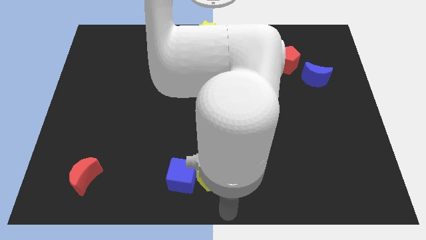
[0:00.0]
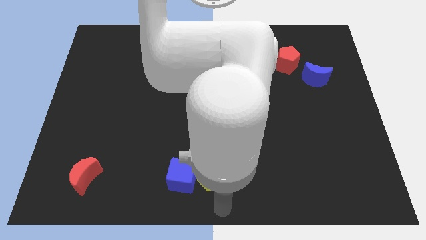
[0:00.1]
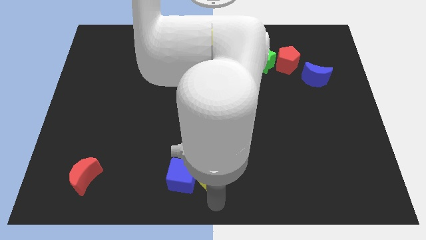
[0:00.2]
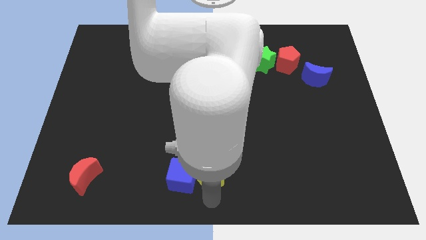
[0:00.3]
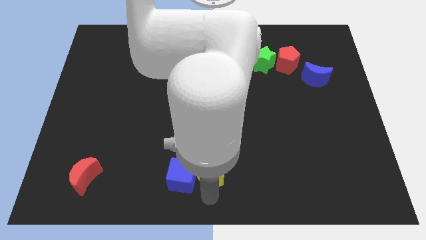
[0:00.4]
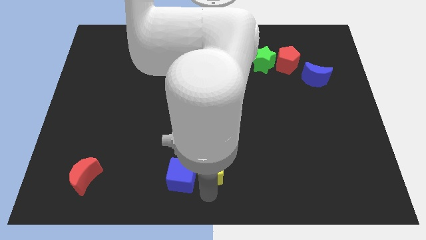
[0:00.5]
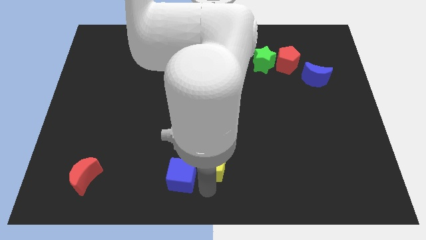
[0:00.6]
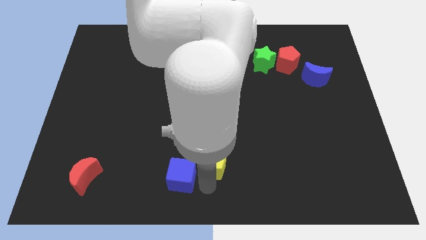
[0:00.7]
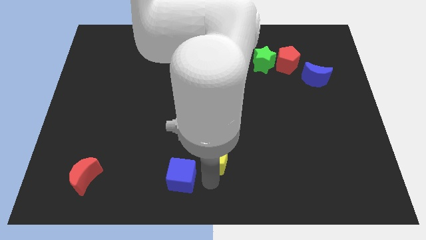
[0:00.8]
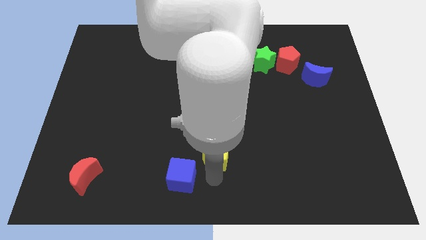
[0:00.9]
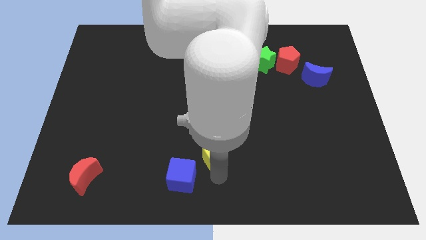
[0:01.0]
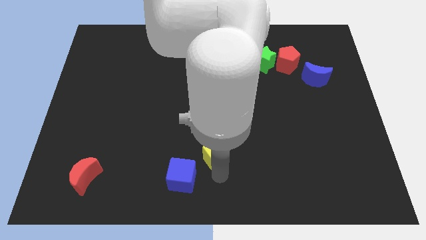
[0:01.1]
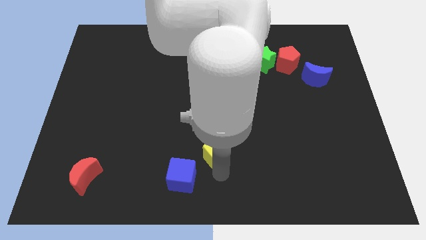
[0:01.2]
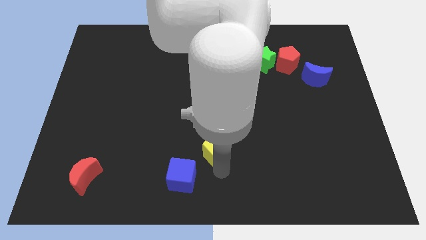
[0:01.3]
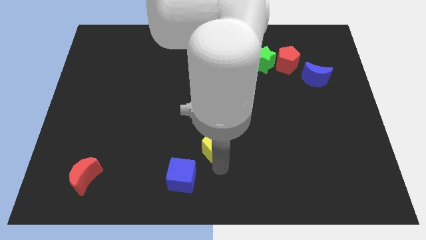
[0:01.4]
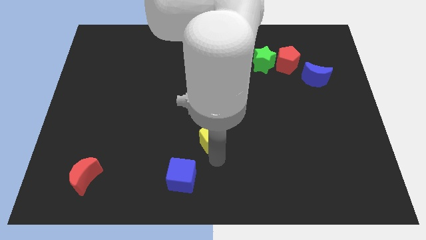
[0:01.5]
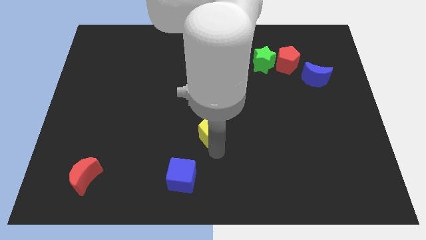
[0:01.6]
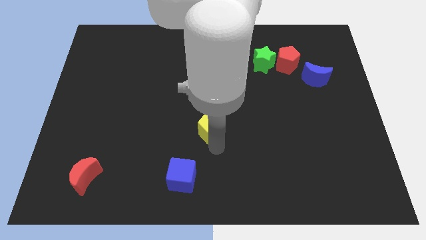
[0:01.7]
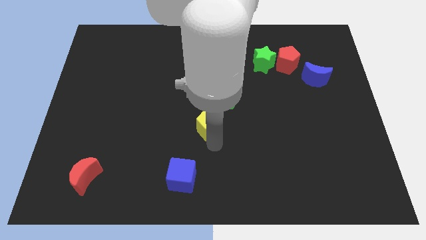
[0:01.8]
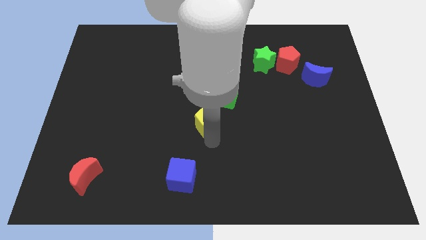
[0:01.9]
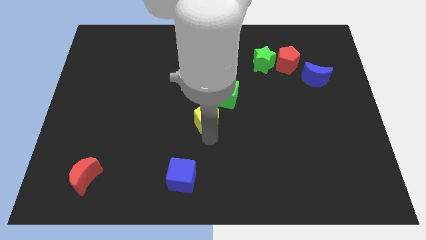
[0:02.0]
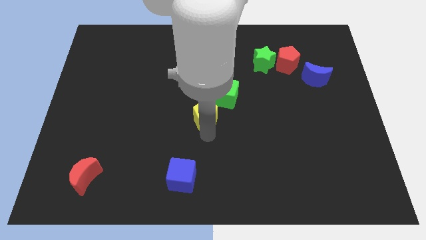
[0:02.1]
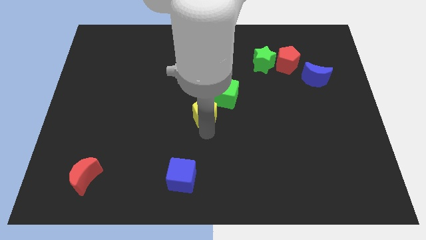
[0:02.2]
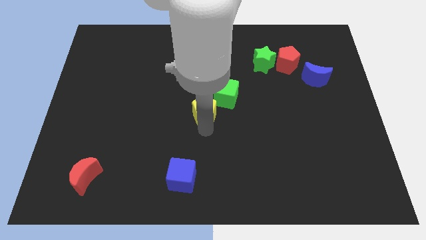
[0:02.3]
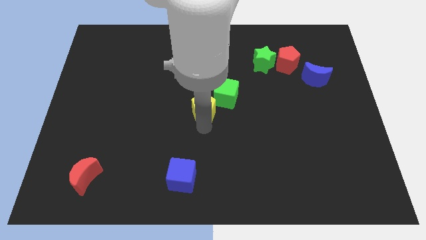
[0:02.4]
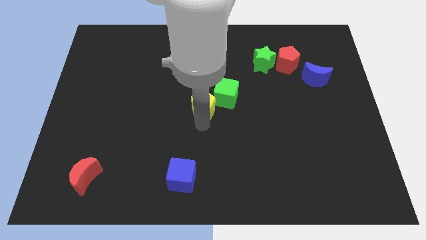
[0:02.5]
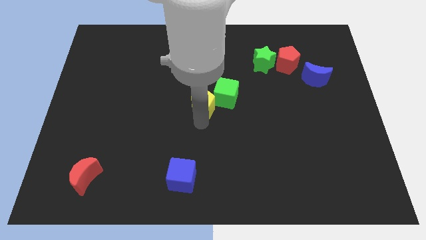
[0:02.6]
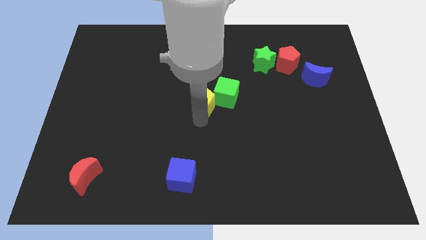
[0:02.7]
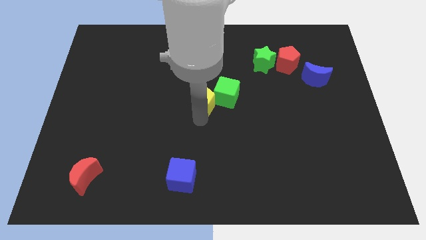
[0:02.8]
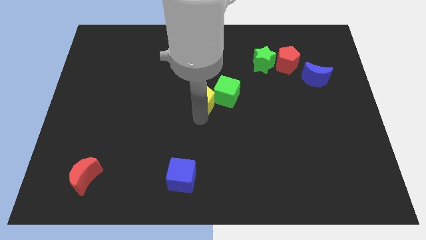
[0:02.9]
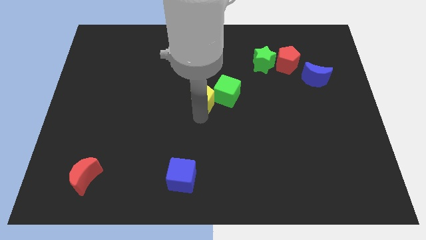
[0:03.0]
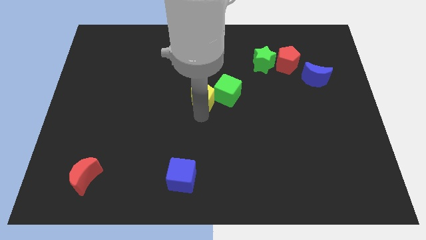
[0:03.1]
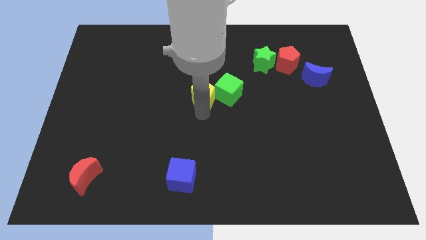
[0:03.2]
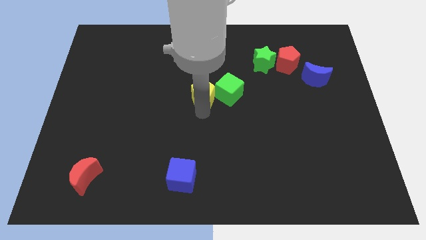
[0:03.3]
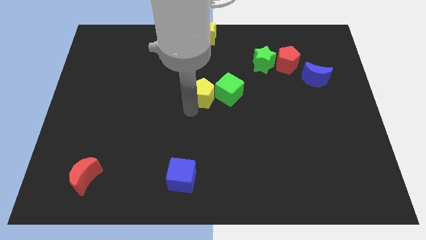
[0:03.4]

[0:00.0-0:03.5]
move the yellow pentagon to the left side of the green cube

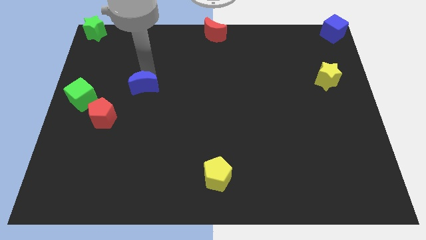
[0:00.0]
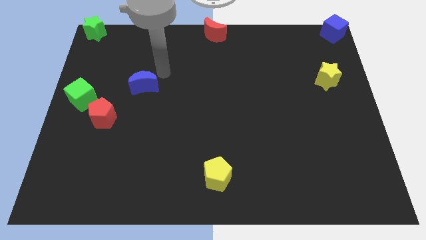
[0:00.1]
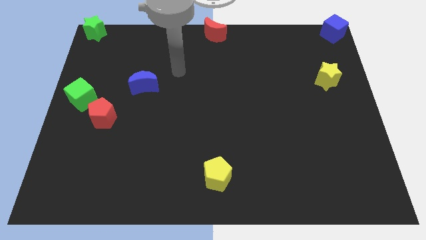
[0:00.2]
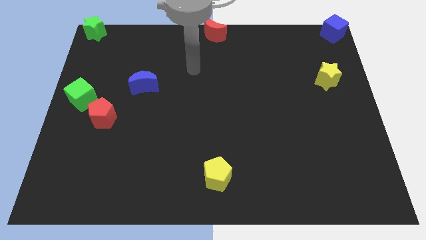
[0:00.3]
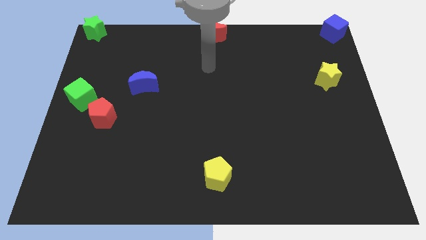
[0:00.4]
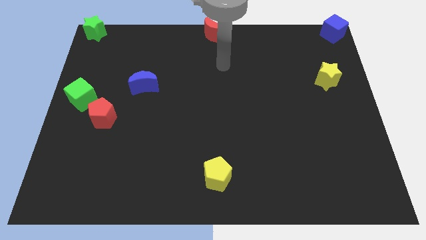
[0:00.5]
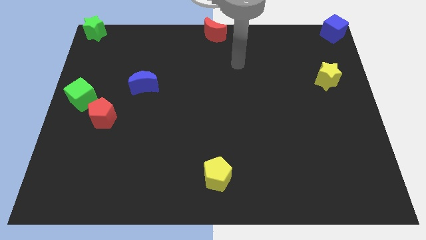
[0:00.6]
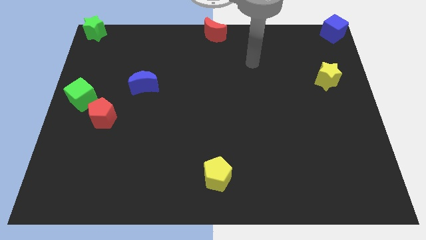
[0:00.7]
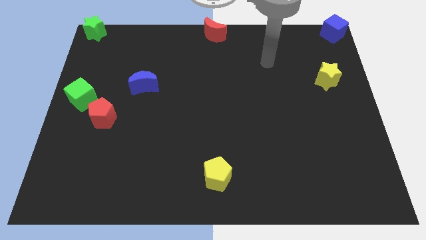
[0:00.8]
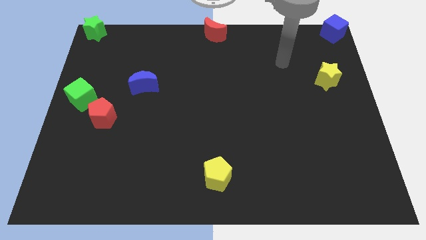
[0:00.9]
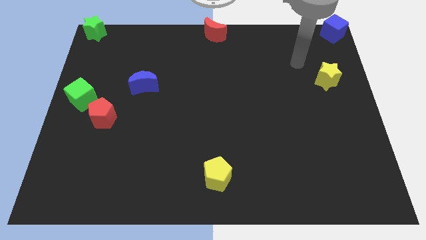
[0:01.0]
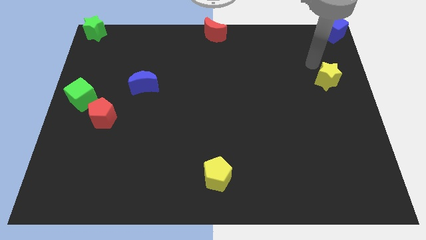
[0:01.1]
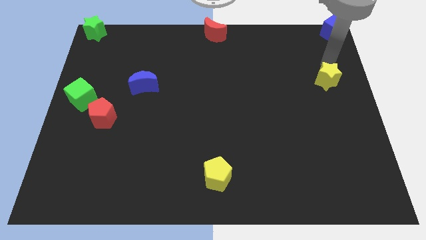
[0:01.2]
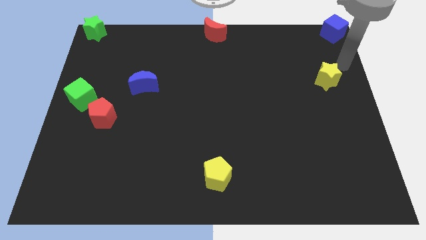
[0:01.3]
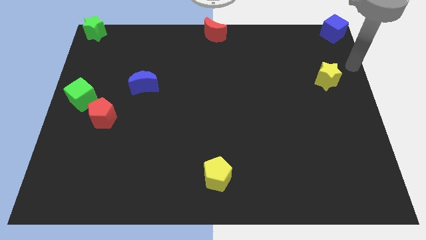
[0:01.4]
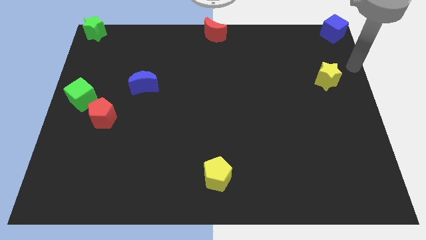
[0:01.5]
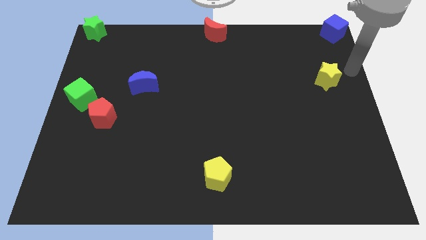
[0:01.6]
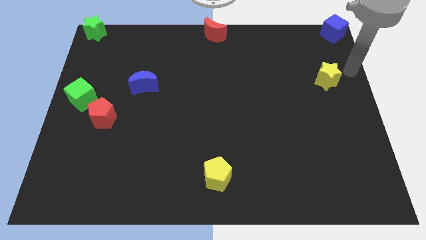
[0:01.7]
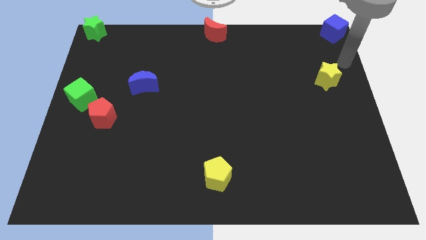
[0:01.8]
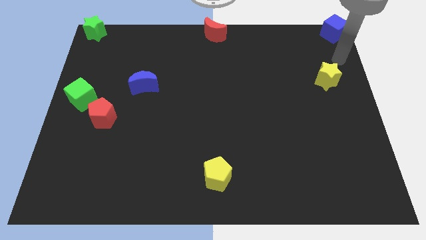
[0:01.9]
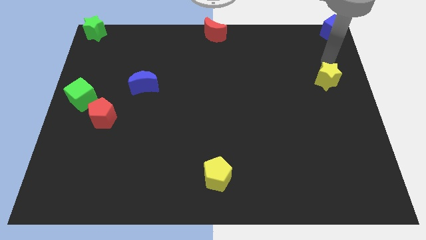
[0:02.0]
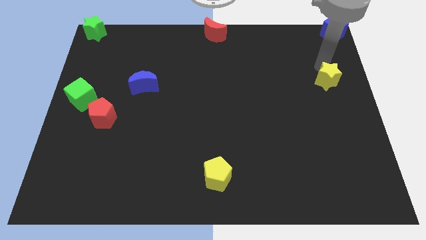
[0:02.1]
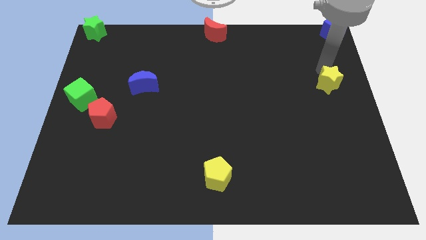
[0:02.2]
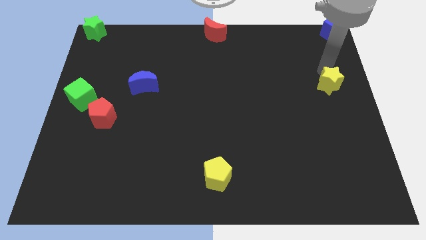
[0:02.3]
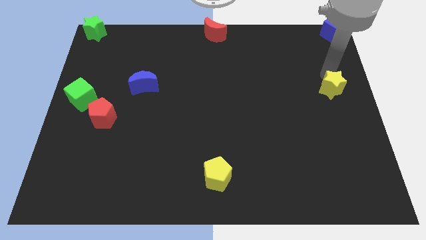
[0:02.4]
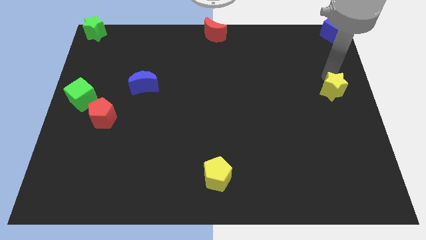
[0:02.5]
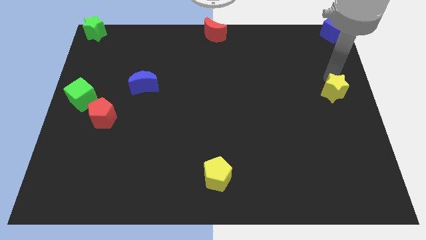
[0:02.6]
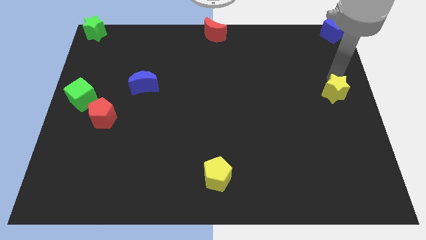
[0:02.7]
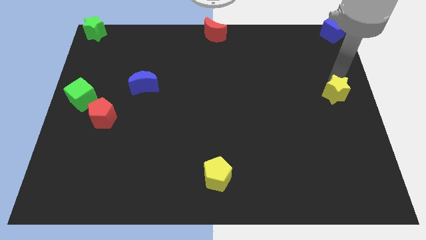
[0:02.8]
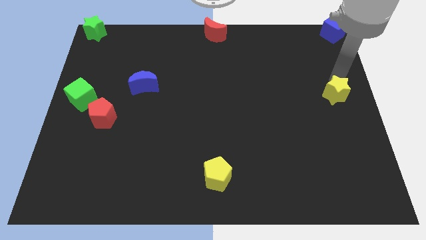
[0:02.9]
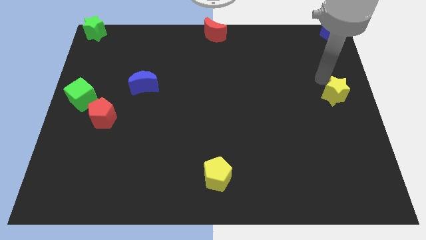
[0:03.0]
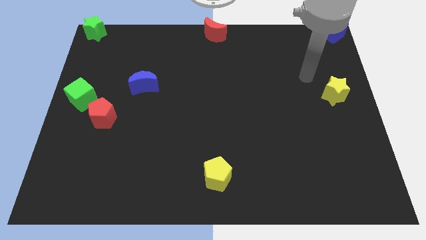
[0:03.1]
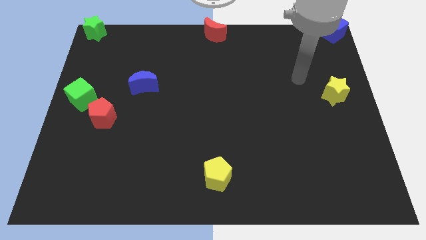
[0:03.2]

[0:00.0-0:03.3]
move the yellow star towards the center right of the board

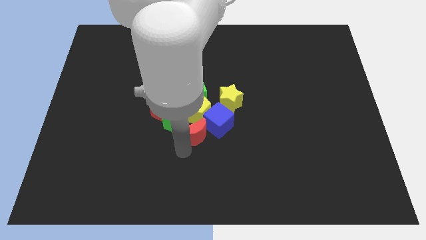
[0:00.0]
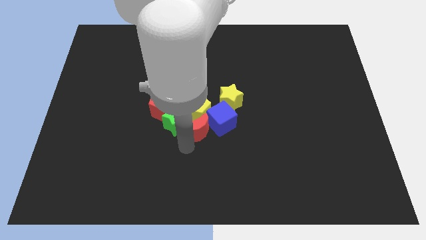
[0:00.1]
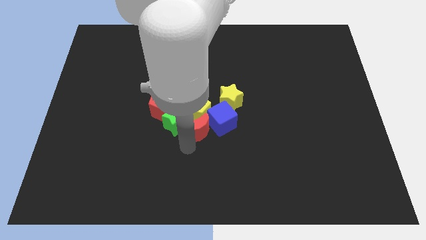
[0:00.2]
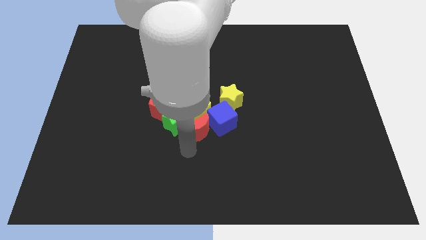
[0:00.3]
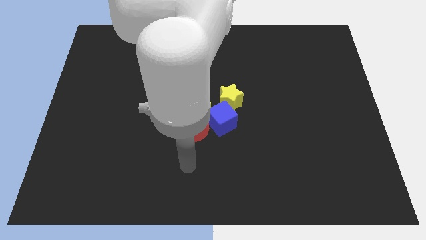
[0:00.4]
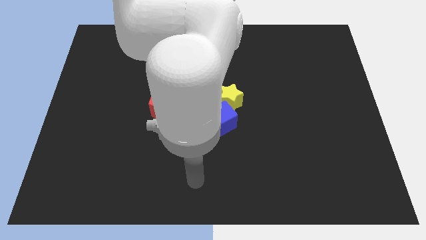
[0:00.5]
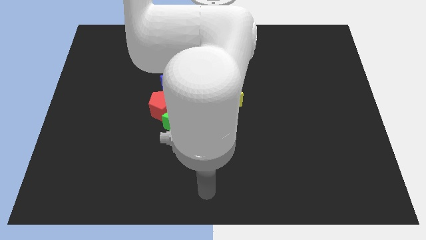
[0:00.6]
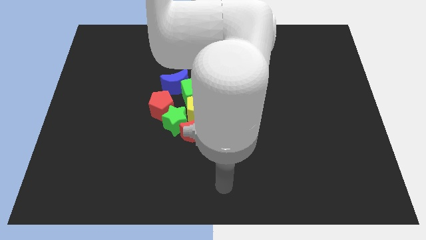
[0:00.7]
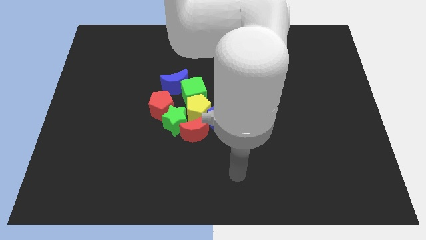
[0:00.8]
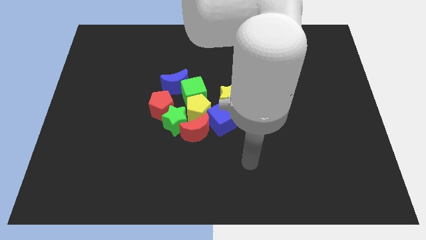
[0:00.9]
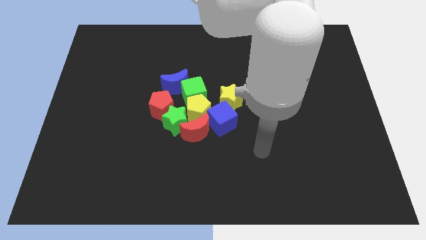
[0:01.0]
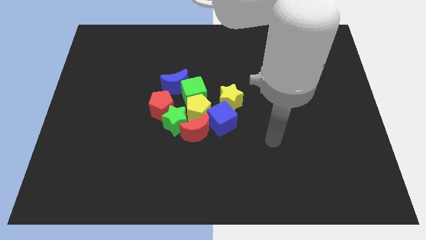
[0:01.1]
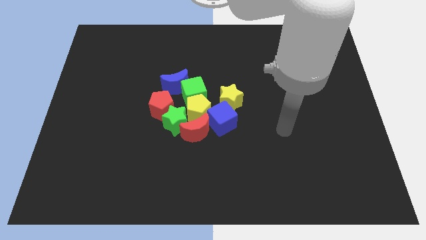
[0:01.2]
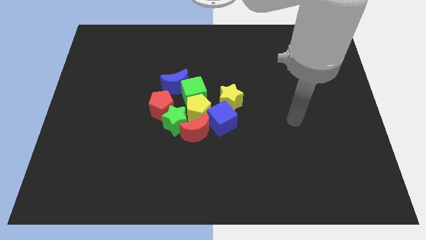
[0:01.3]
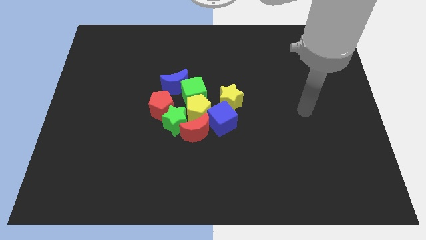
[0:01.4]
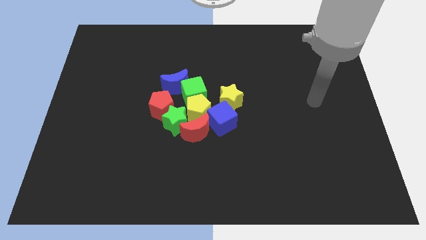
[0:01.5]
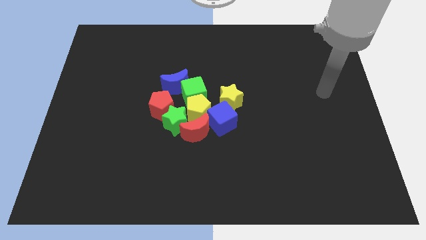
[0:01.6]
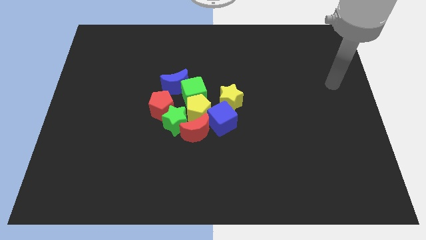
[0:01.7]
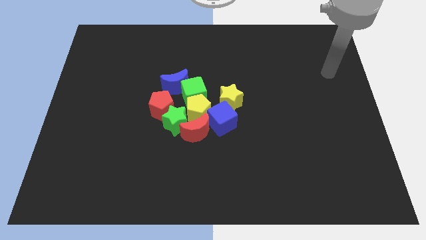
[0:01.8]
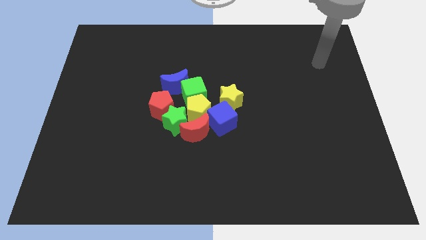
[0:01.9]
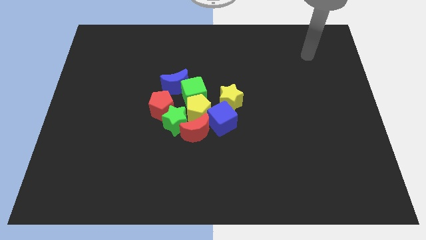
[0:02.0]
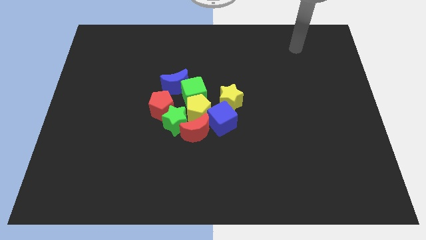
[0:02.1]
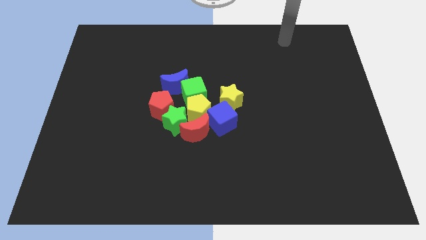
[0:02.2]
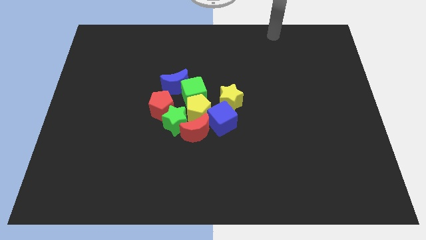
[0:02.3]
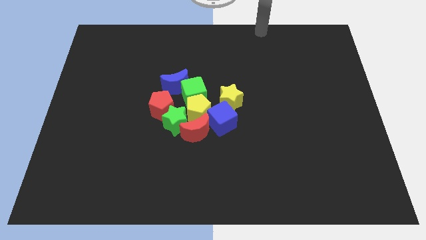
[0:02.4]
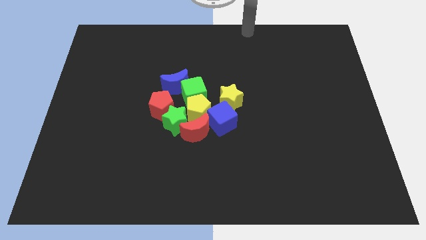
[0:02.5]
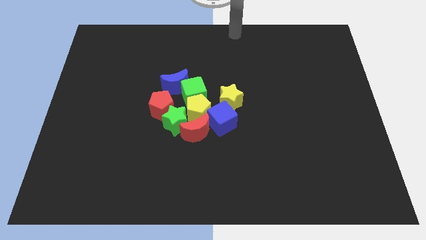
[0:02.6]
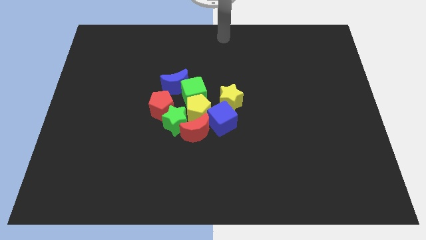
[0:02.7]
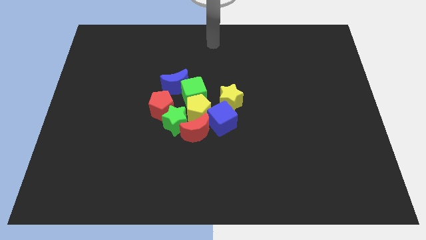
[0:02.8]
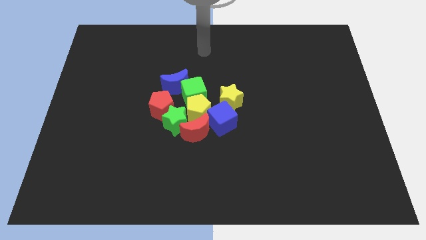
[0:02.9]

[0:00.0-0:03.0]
place your arm to the top center
